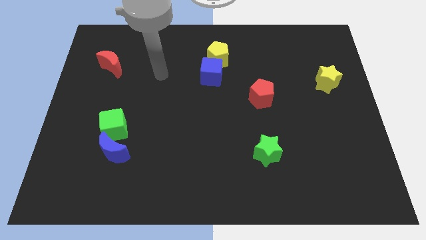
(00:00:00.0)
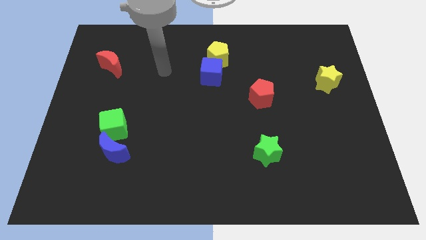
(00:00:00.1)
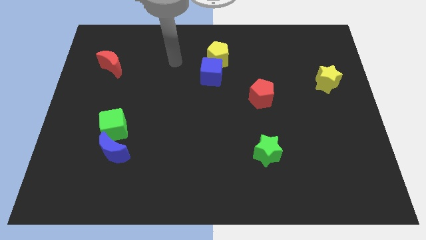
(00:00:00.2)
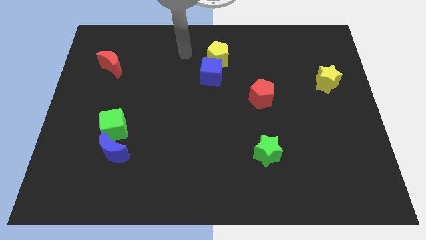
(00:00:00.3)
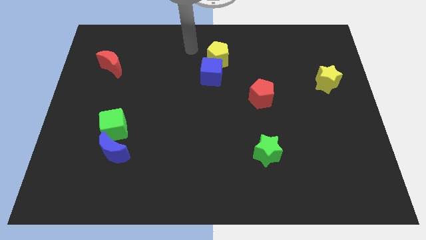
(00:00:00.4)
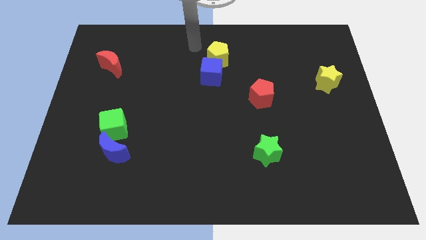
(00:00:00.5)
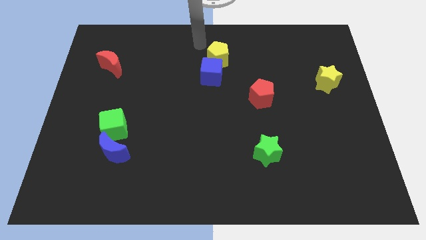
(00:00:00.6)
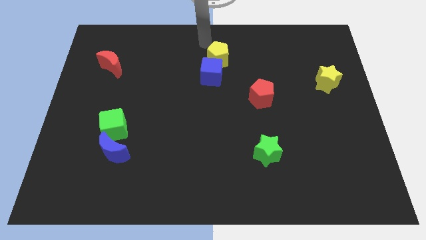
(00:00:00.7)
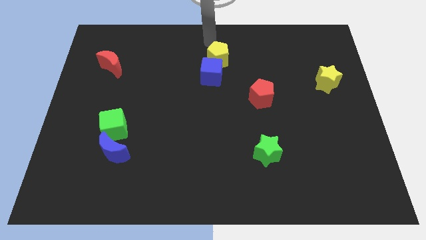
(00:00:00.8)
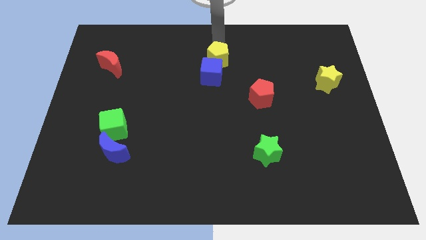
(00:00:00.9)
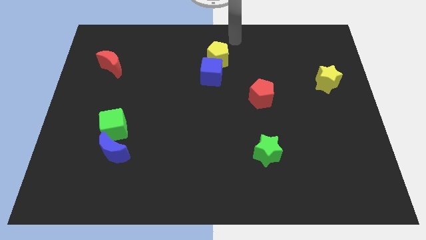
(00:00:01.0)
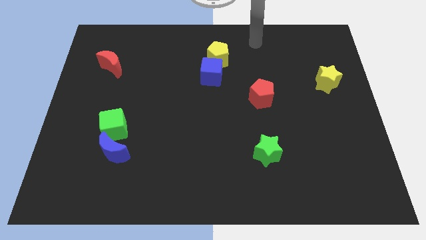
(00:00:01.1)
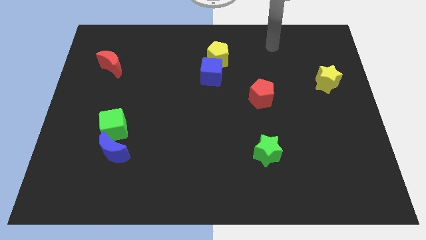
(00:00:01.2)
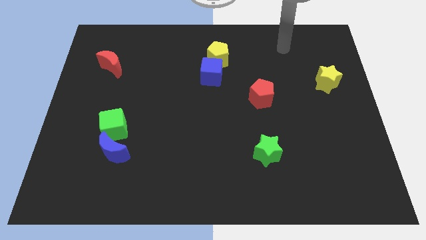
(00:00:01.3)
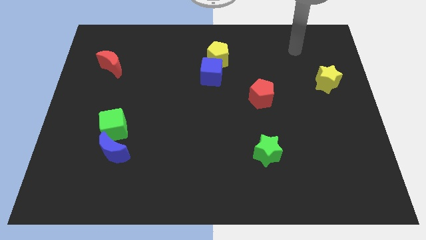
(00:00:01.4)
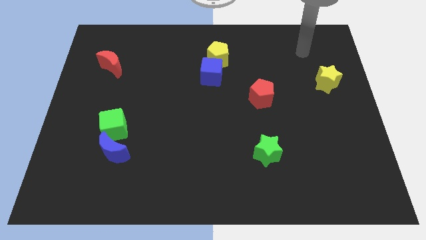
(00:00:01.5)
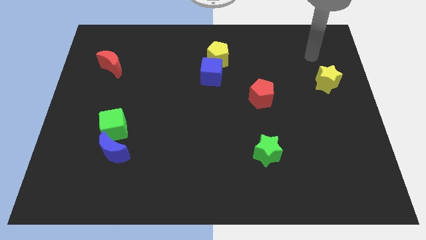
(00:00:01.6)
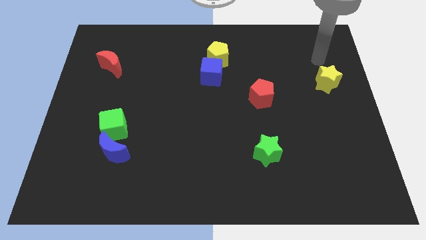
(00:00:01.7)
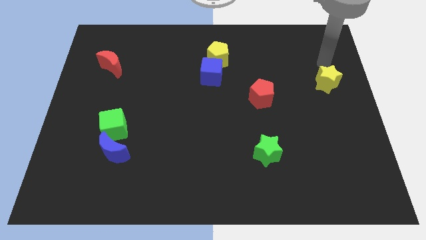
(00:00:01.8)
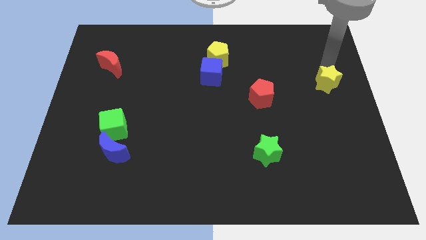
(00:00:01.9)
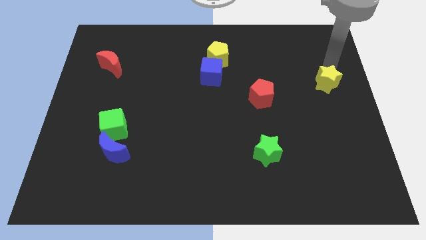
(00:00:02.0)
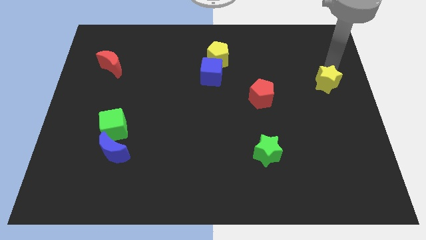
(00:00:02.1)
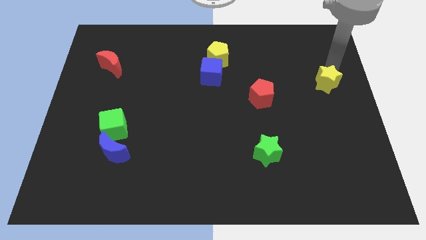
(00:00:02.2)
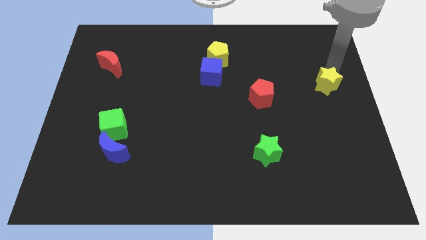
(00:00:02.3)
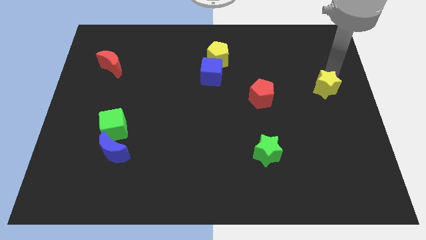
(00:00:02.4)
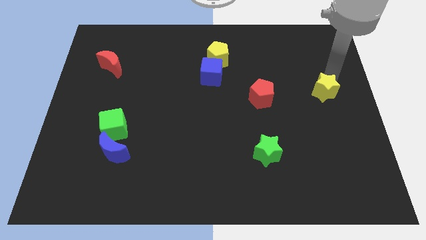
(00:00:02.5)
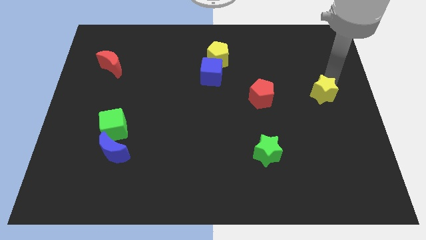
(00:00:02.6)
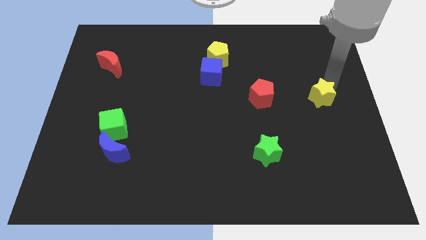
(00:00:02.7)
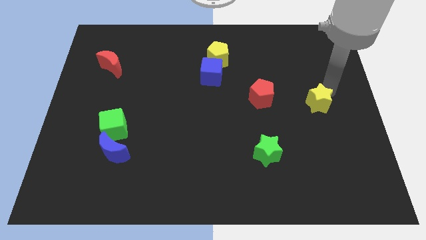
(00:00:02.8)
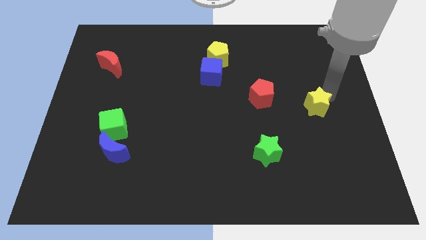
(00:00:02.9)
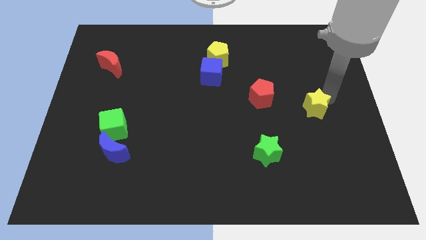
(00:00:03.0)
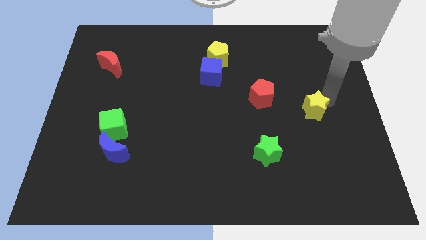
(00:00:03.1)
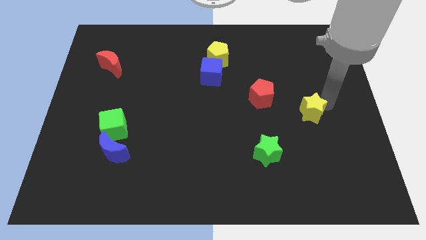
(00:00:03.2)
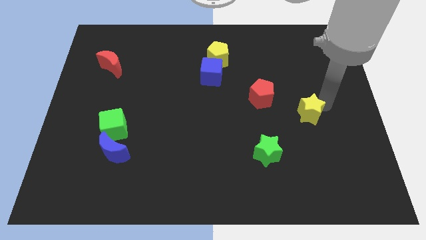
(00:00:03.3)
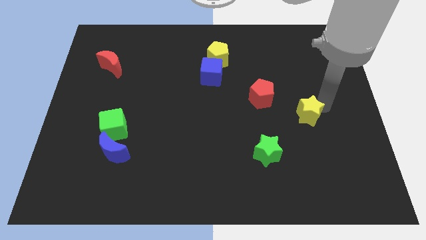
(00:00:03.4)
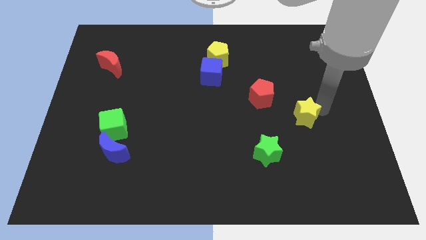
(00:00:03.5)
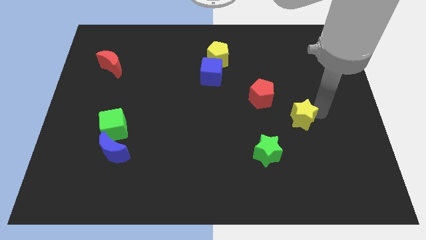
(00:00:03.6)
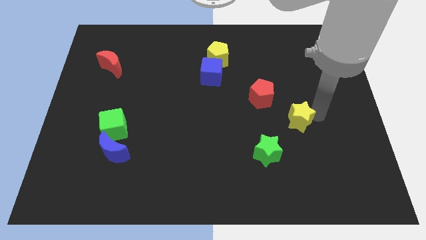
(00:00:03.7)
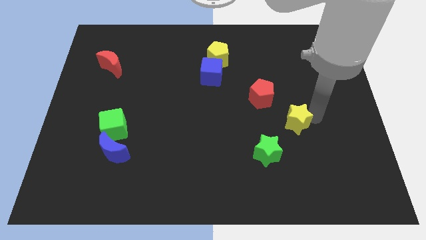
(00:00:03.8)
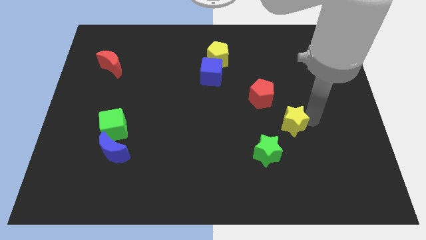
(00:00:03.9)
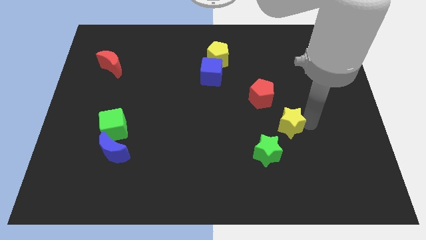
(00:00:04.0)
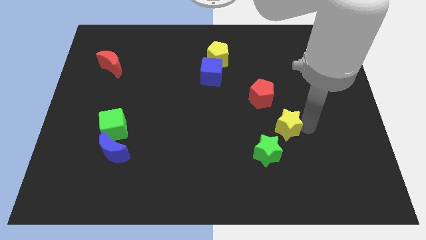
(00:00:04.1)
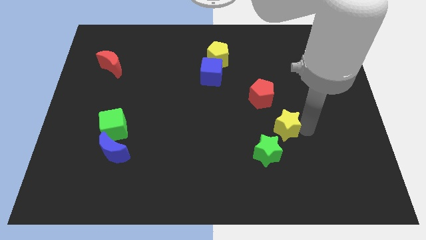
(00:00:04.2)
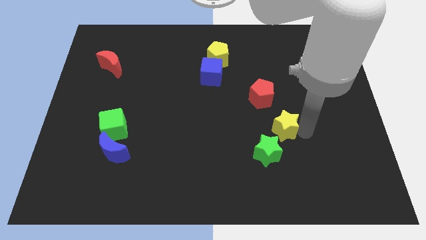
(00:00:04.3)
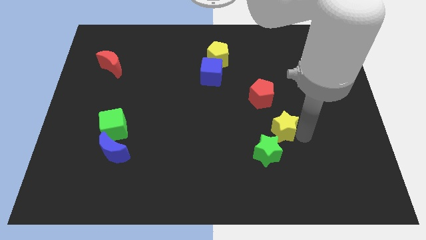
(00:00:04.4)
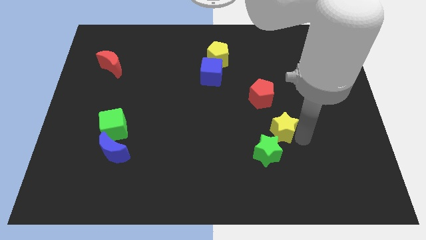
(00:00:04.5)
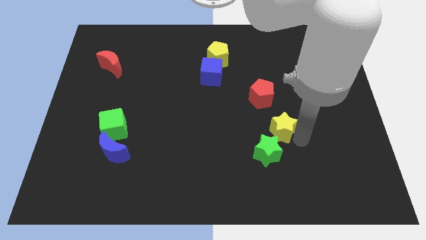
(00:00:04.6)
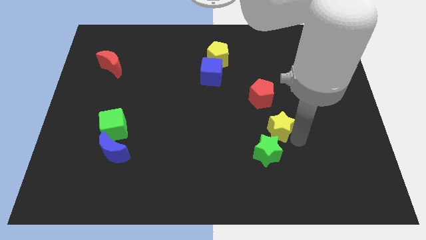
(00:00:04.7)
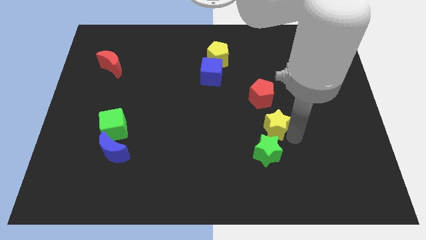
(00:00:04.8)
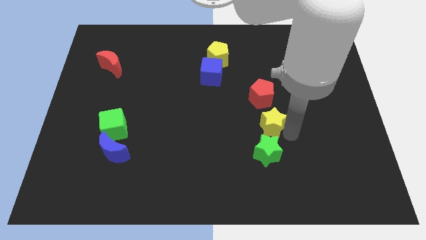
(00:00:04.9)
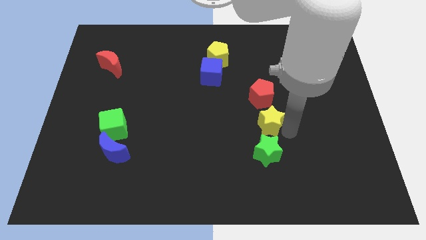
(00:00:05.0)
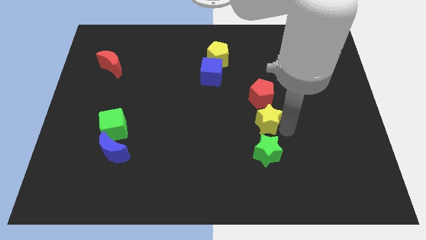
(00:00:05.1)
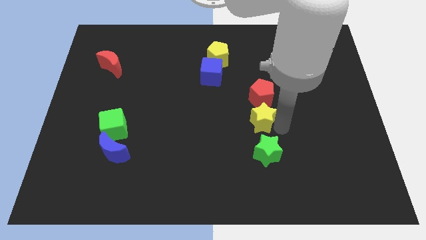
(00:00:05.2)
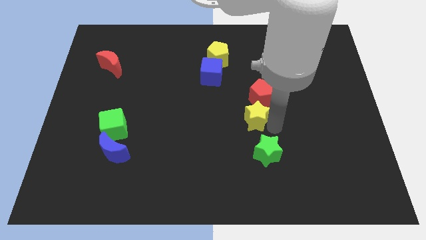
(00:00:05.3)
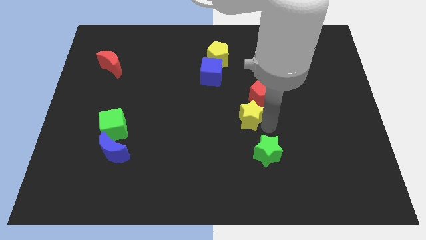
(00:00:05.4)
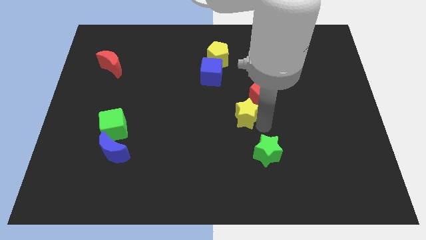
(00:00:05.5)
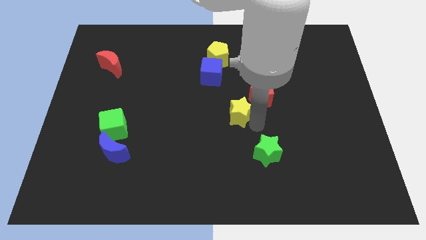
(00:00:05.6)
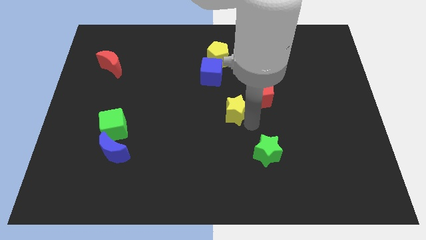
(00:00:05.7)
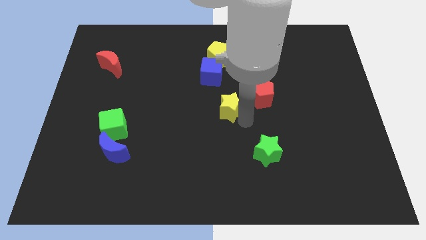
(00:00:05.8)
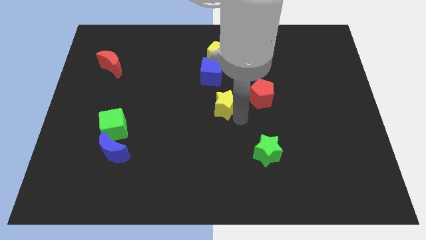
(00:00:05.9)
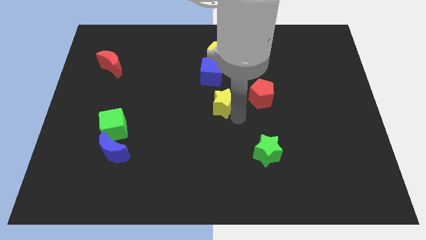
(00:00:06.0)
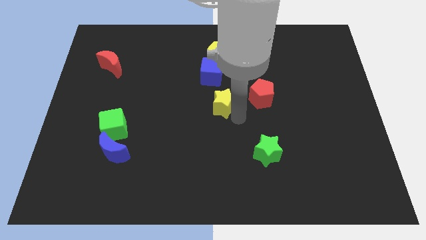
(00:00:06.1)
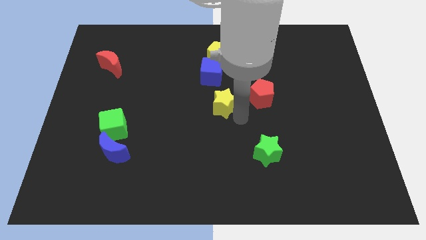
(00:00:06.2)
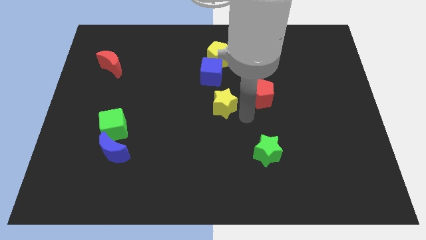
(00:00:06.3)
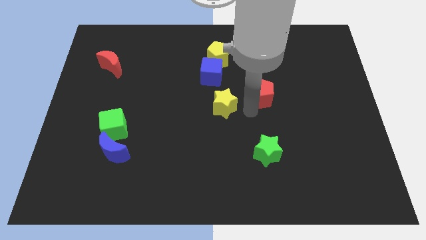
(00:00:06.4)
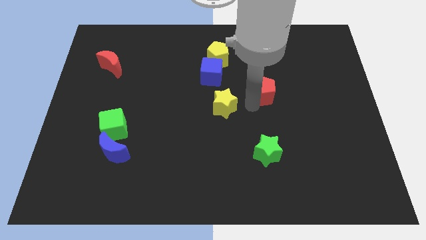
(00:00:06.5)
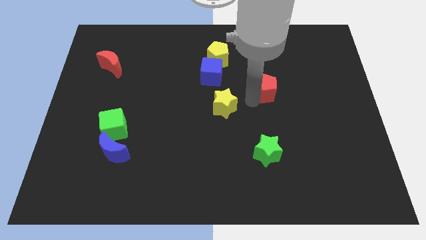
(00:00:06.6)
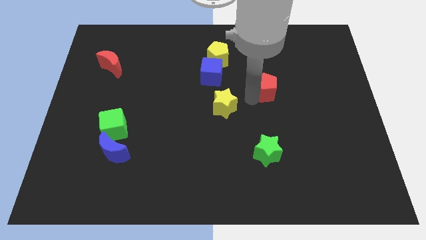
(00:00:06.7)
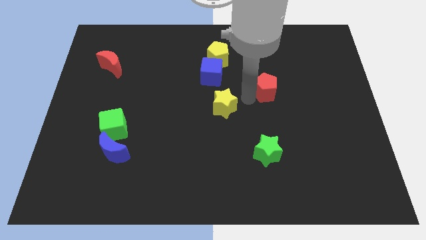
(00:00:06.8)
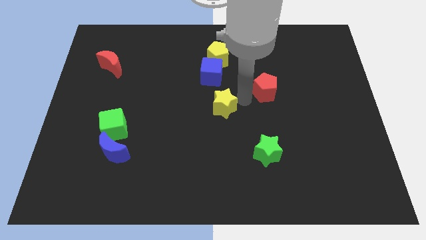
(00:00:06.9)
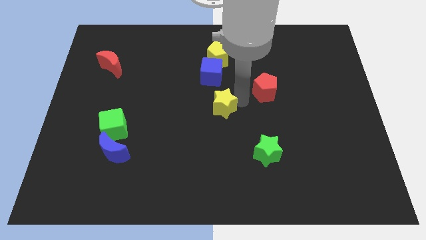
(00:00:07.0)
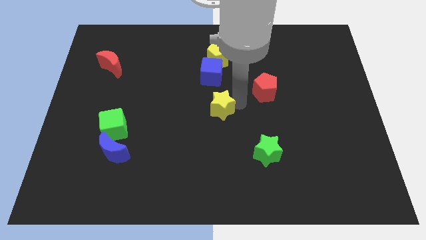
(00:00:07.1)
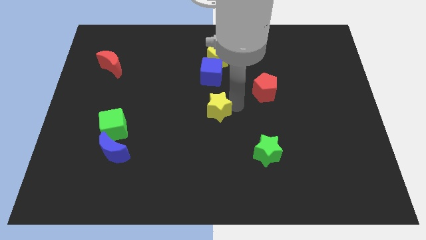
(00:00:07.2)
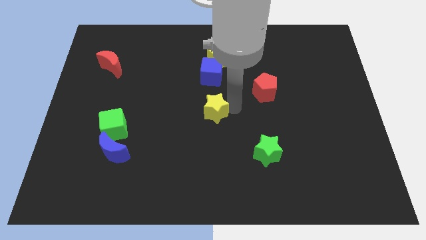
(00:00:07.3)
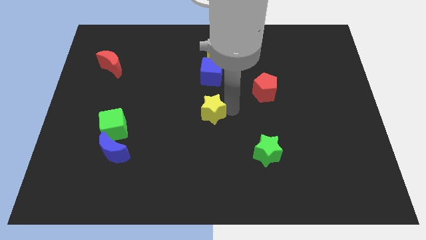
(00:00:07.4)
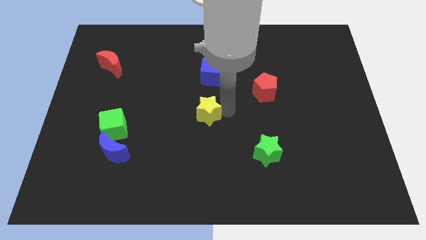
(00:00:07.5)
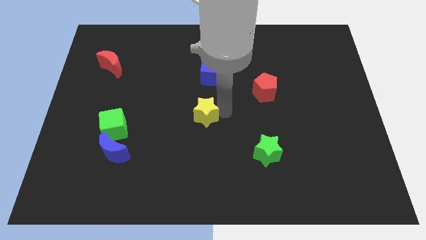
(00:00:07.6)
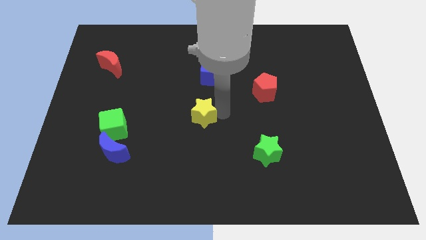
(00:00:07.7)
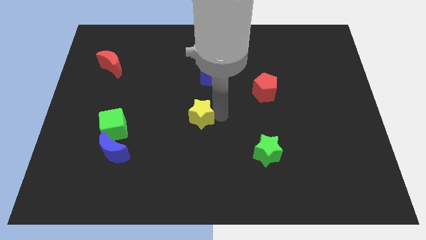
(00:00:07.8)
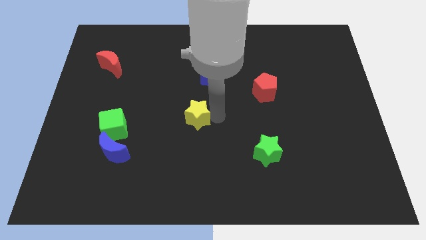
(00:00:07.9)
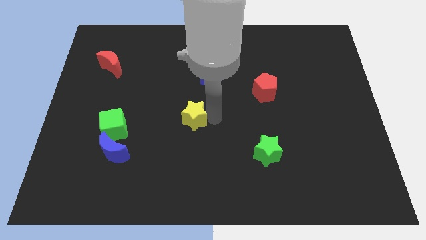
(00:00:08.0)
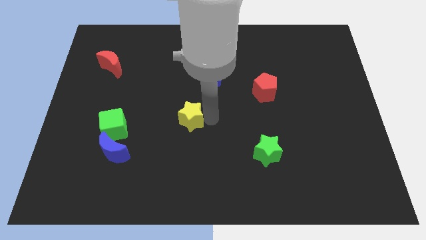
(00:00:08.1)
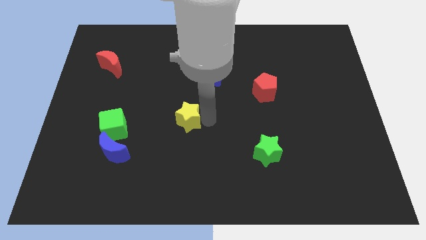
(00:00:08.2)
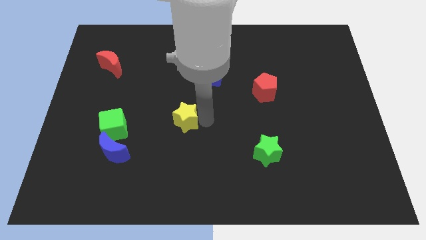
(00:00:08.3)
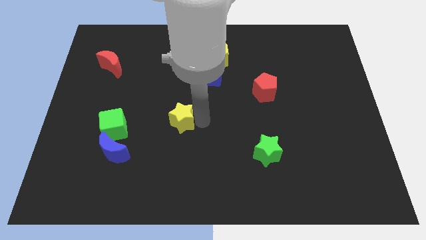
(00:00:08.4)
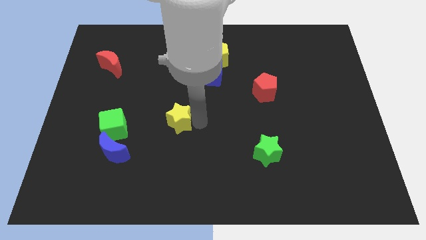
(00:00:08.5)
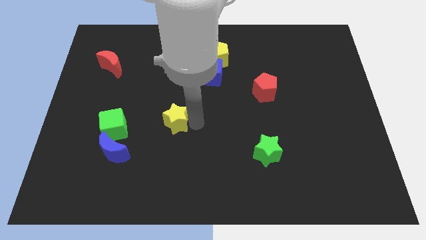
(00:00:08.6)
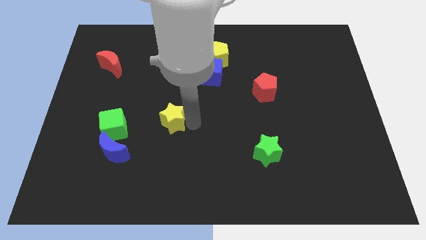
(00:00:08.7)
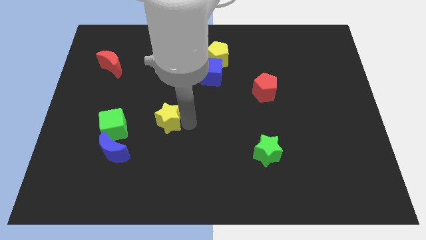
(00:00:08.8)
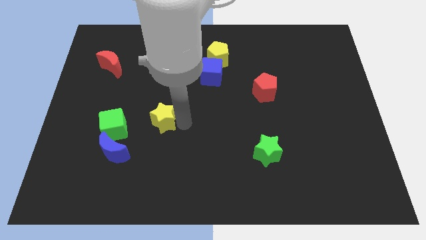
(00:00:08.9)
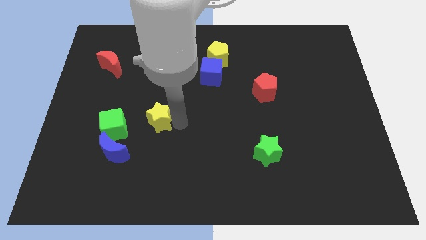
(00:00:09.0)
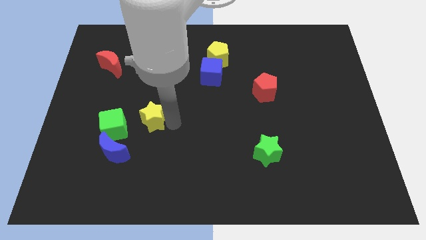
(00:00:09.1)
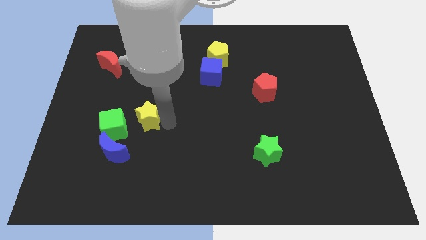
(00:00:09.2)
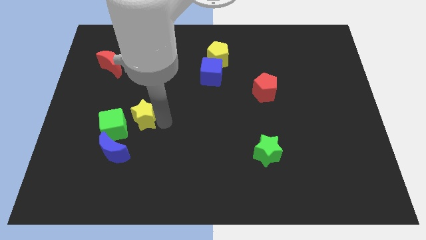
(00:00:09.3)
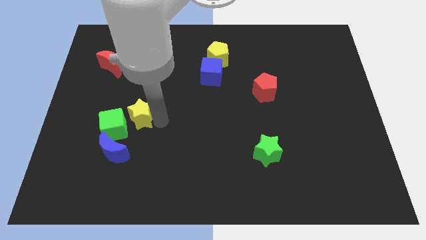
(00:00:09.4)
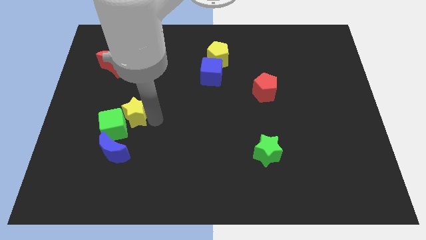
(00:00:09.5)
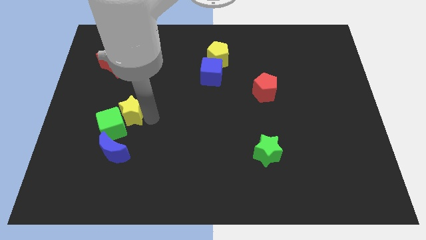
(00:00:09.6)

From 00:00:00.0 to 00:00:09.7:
put the yellow star next to the green cube
